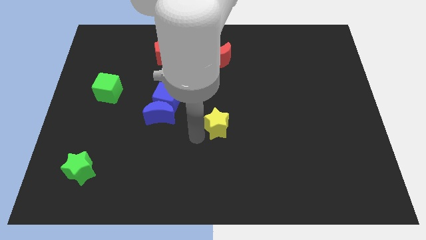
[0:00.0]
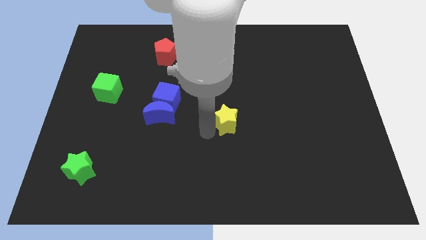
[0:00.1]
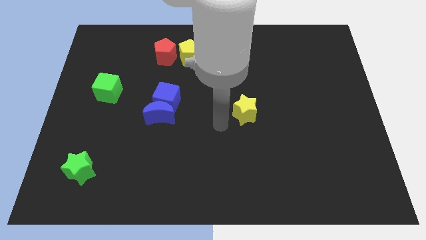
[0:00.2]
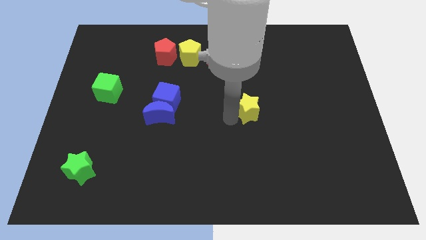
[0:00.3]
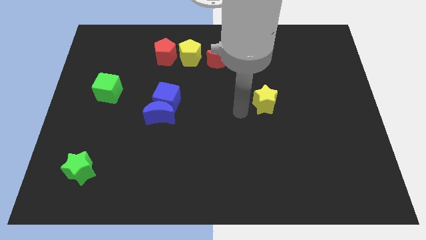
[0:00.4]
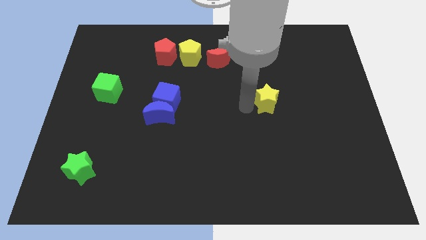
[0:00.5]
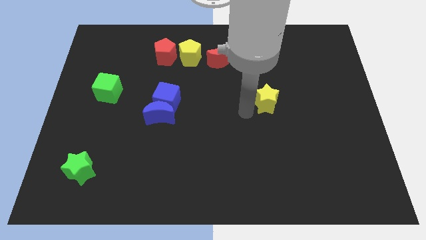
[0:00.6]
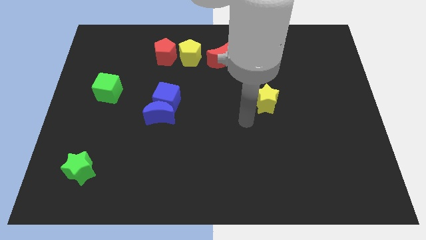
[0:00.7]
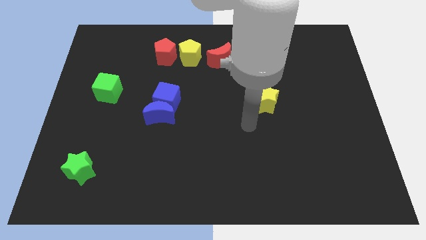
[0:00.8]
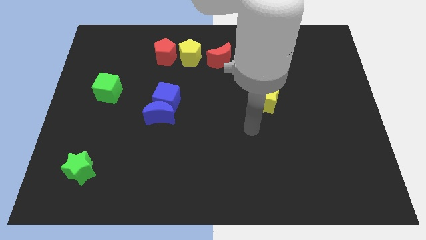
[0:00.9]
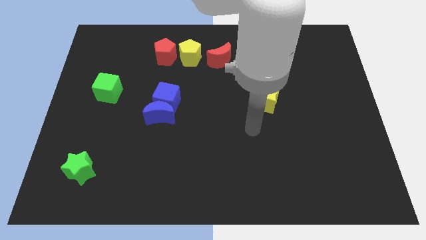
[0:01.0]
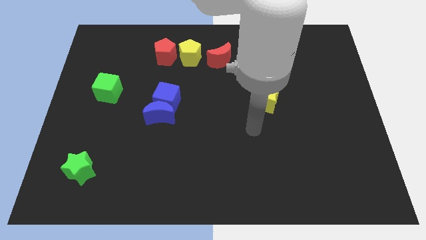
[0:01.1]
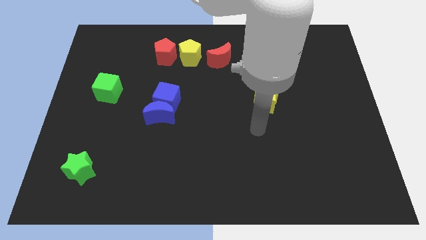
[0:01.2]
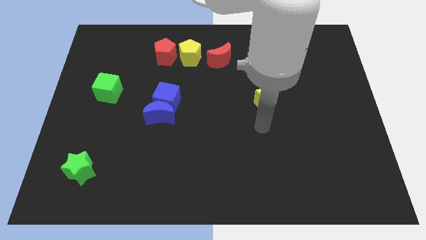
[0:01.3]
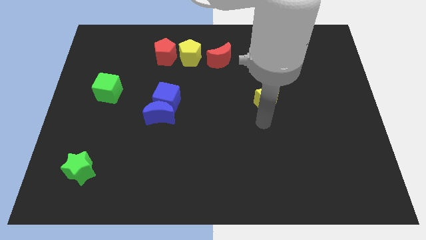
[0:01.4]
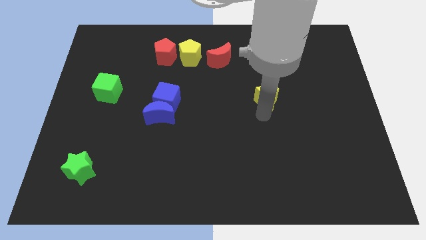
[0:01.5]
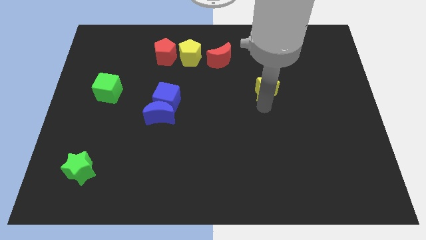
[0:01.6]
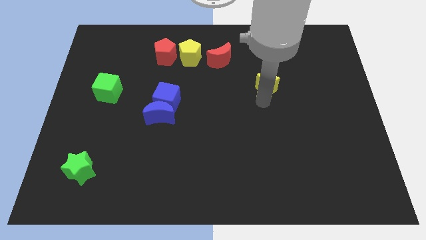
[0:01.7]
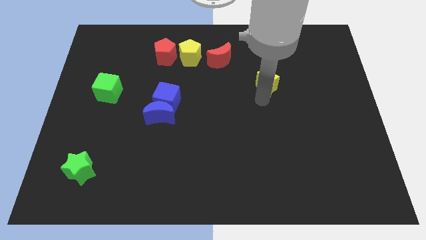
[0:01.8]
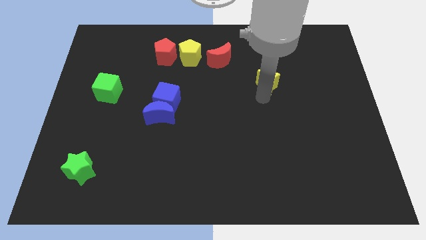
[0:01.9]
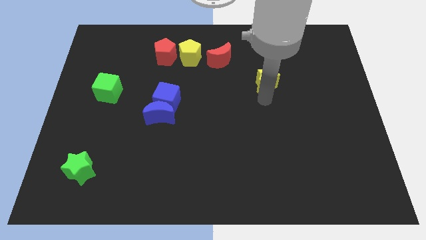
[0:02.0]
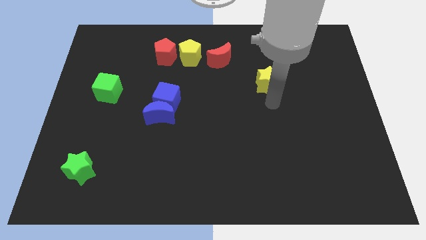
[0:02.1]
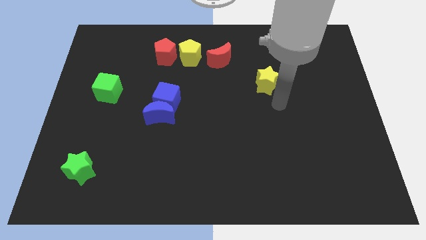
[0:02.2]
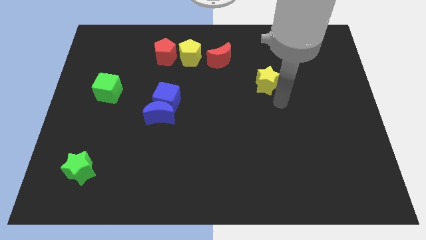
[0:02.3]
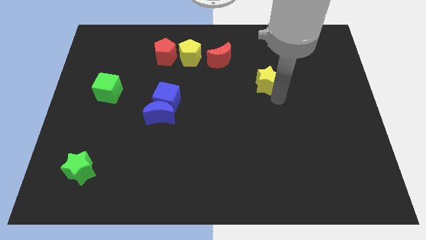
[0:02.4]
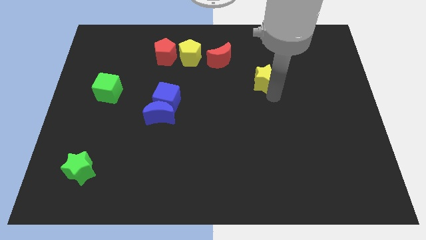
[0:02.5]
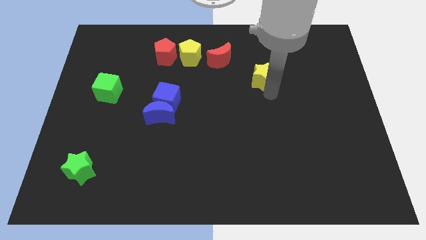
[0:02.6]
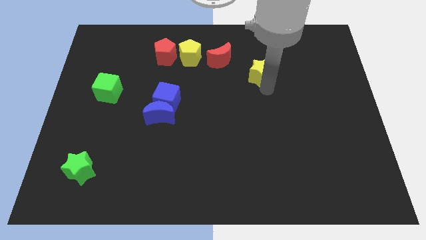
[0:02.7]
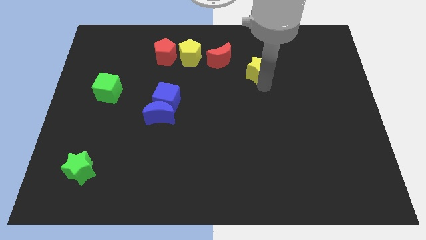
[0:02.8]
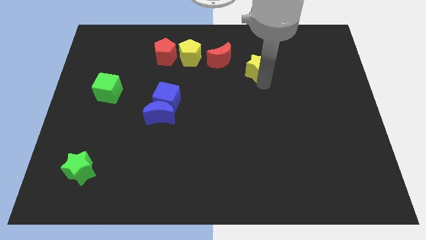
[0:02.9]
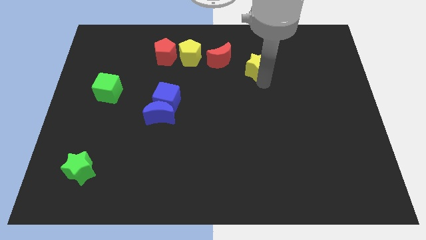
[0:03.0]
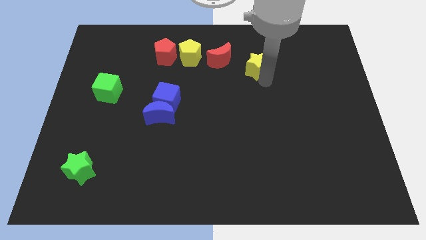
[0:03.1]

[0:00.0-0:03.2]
push the yellow star towards the red crescent

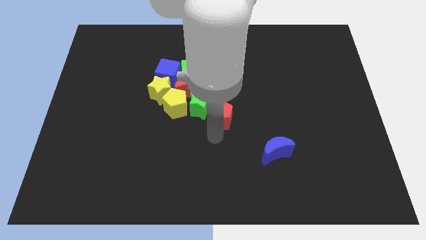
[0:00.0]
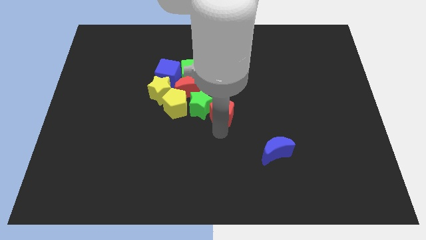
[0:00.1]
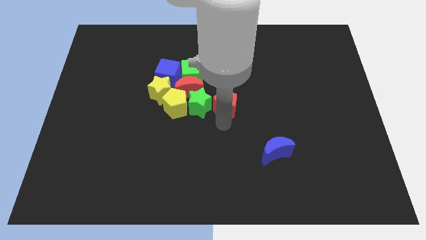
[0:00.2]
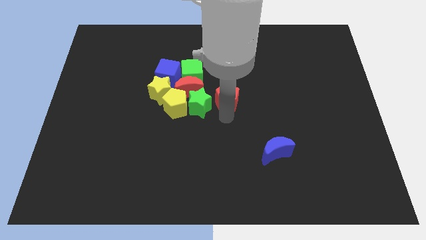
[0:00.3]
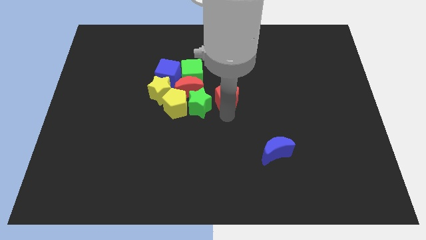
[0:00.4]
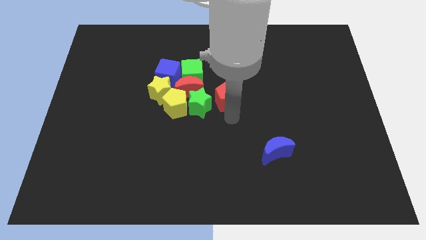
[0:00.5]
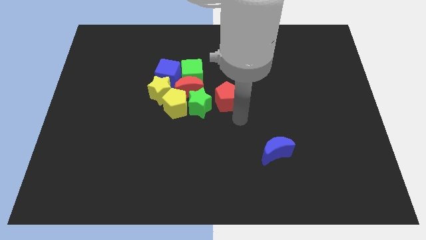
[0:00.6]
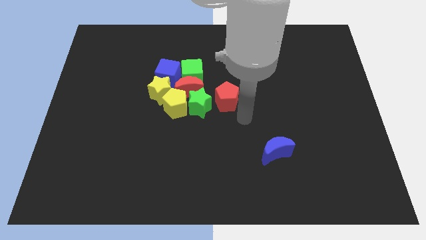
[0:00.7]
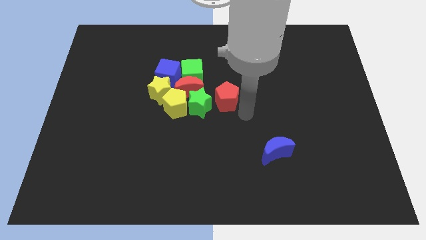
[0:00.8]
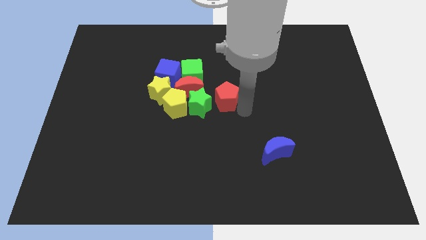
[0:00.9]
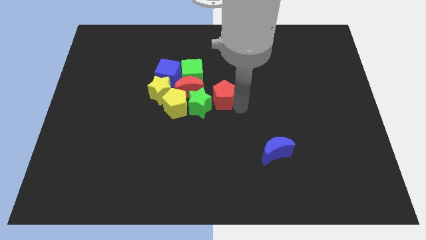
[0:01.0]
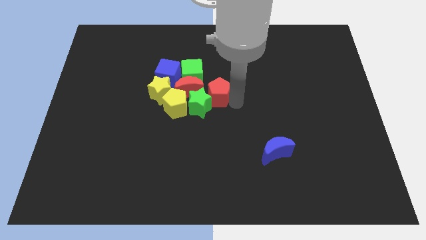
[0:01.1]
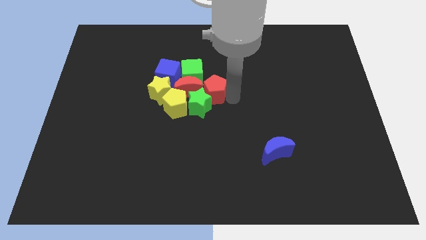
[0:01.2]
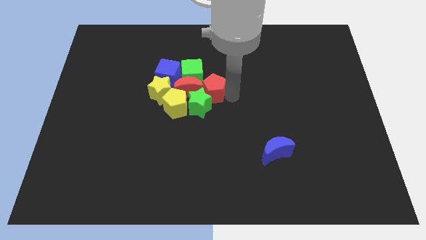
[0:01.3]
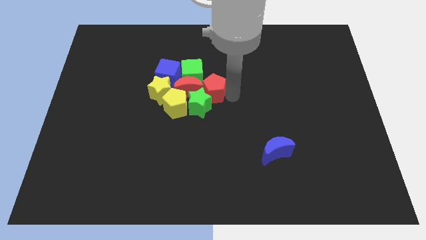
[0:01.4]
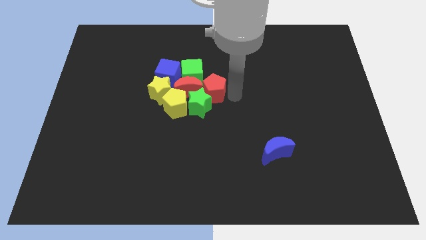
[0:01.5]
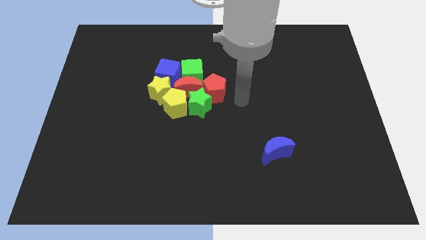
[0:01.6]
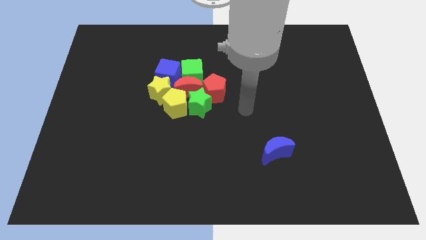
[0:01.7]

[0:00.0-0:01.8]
place the red pentagon beside the red crescent

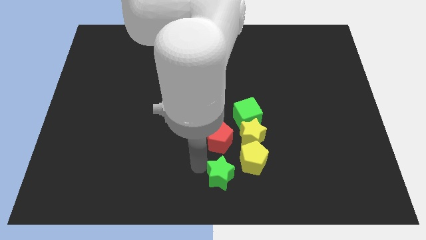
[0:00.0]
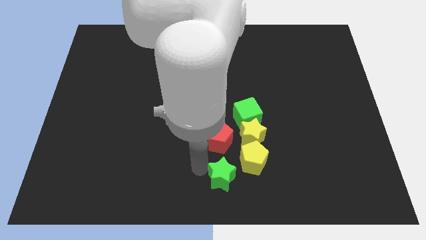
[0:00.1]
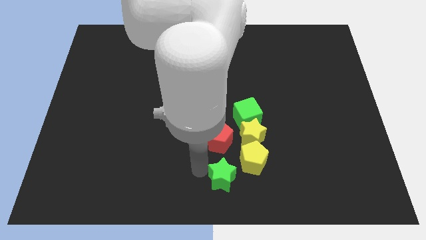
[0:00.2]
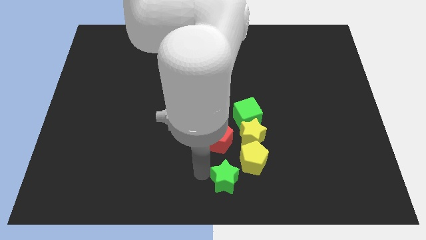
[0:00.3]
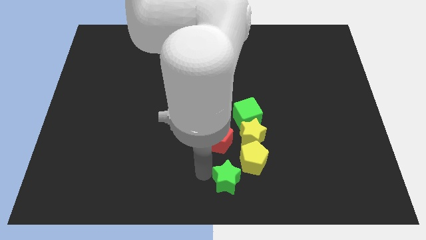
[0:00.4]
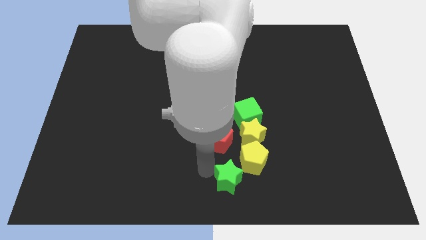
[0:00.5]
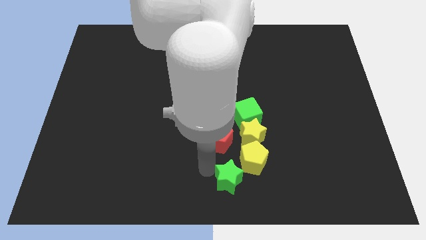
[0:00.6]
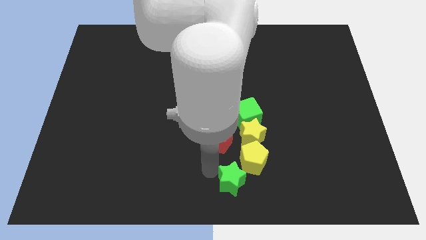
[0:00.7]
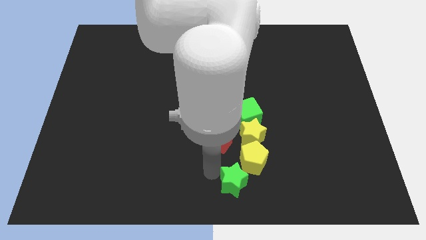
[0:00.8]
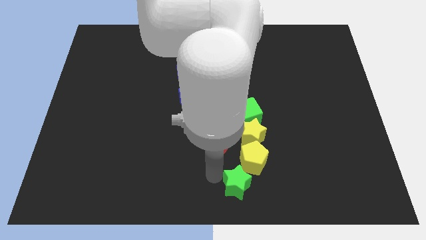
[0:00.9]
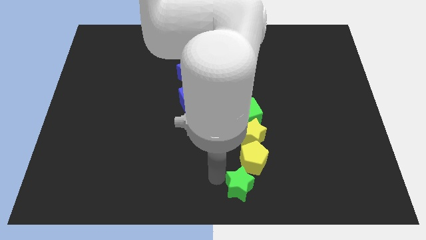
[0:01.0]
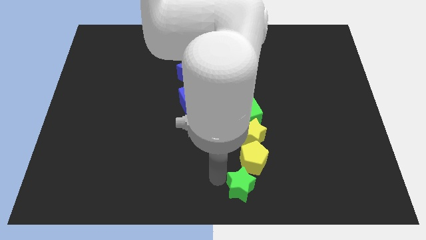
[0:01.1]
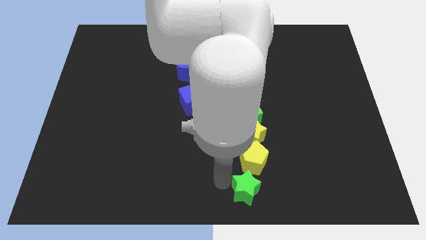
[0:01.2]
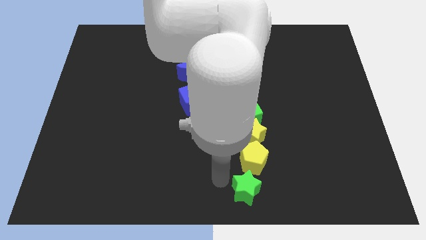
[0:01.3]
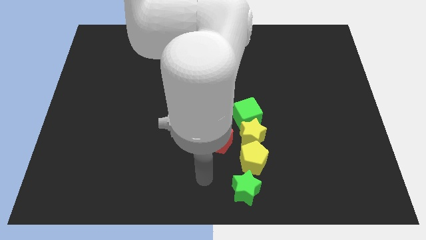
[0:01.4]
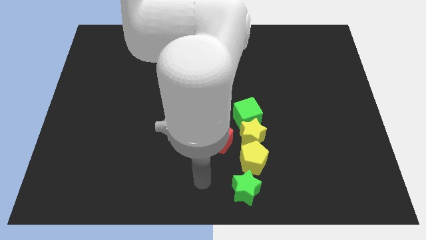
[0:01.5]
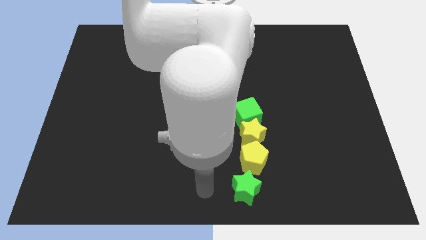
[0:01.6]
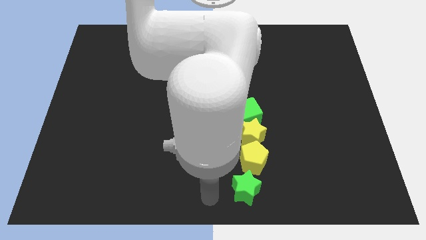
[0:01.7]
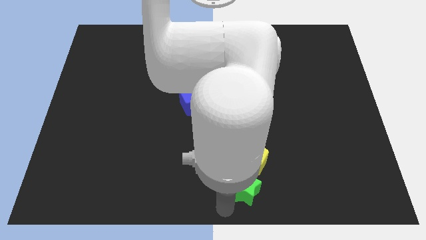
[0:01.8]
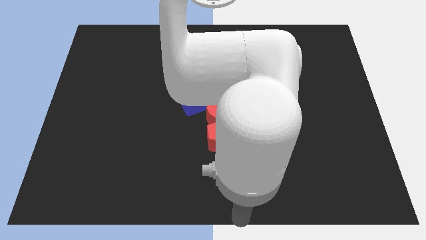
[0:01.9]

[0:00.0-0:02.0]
push the green star to the bottom side of the yellow pentagon

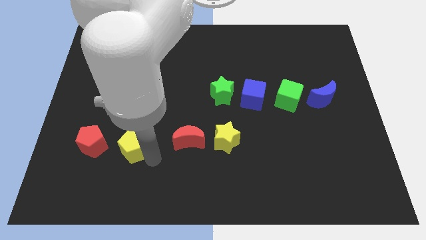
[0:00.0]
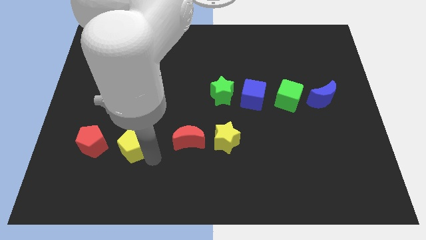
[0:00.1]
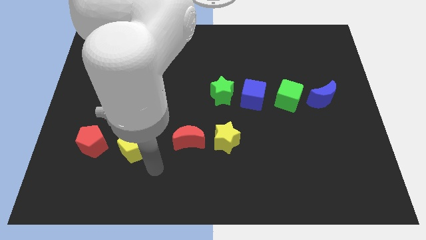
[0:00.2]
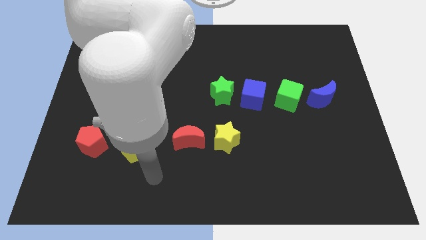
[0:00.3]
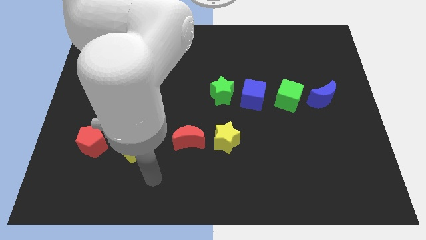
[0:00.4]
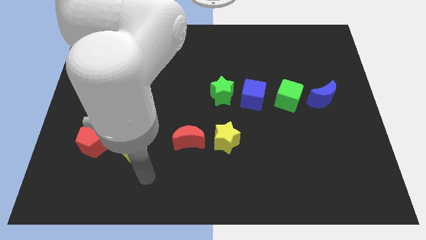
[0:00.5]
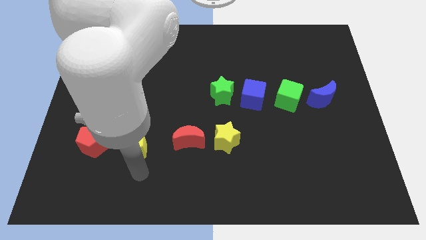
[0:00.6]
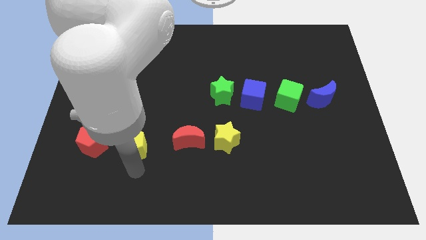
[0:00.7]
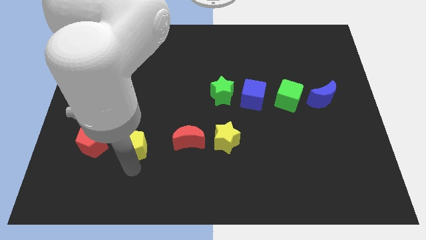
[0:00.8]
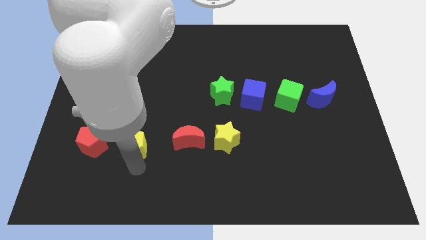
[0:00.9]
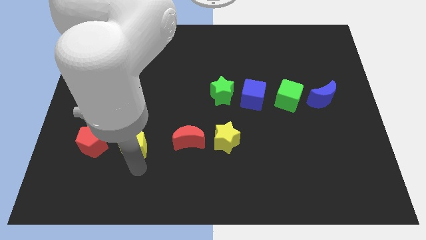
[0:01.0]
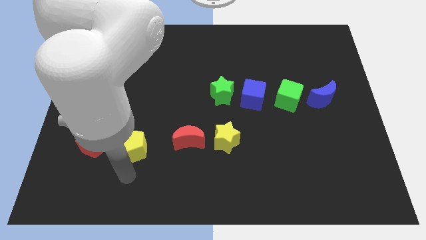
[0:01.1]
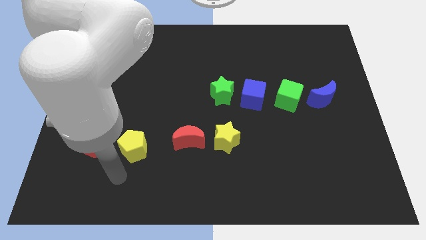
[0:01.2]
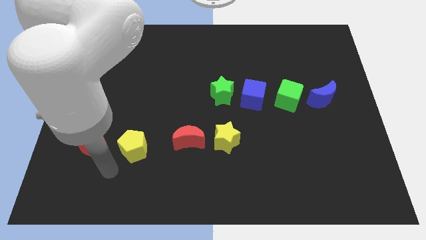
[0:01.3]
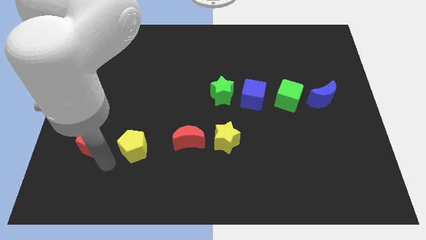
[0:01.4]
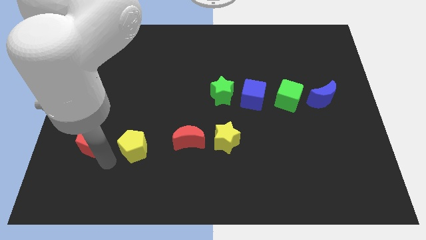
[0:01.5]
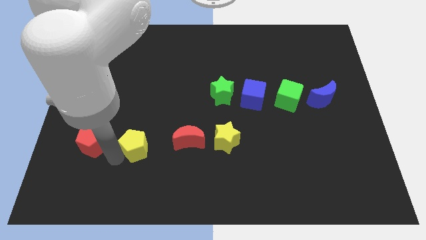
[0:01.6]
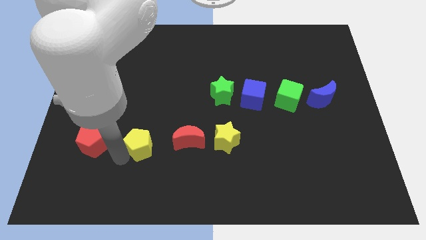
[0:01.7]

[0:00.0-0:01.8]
place yellow pentagon in between red moon and res pentagon

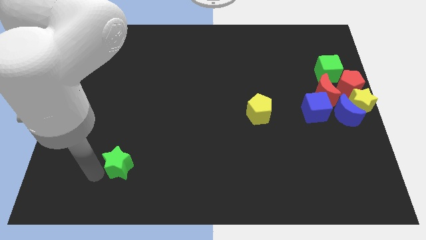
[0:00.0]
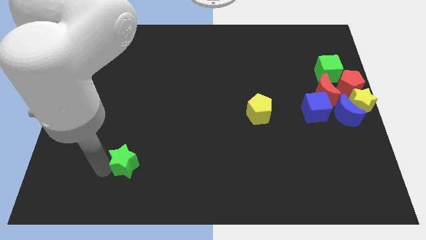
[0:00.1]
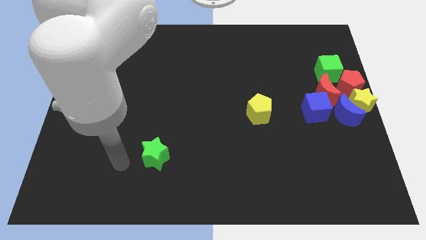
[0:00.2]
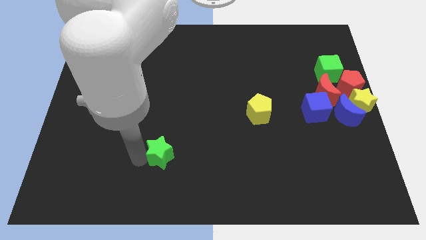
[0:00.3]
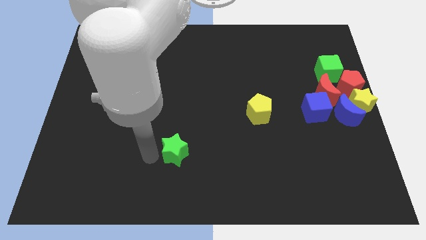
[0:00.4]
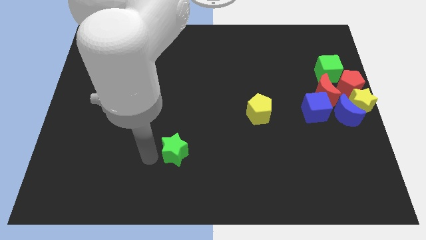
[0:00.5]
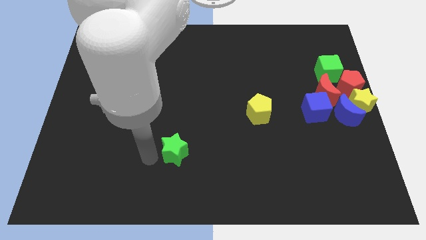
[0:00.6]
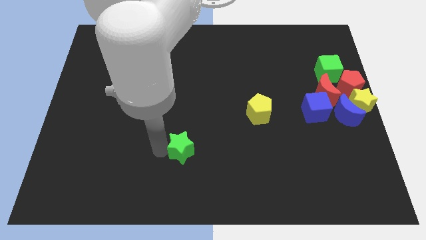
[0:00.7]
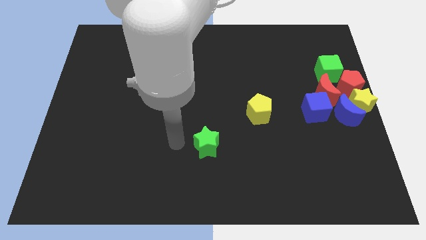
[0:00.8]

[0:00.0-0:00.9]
move green star diagonally below the yellow pentagon
